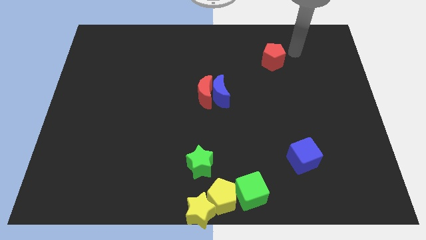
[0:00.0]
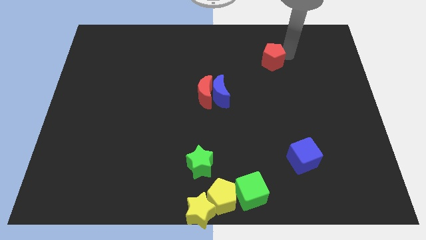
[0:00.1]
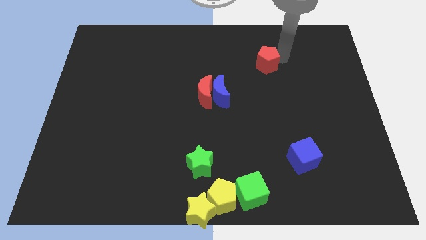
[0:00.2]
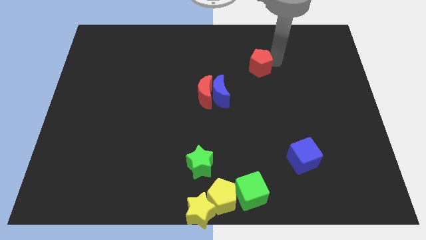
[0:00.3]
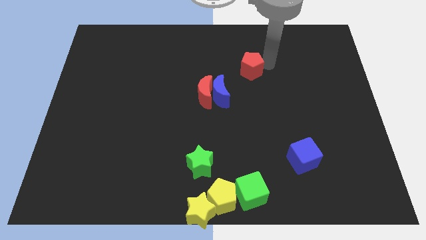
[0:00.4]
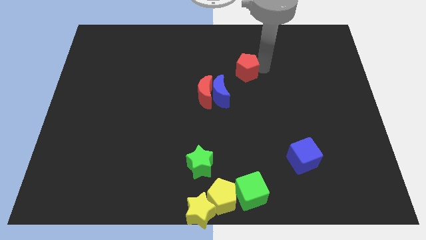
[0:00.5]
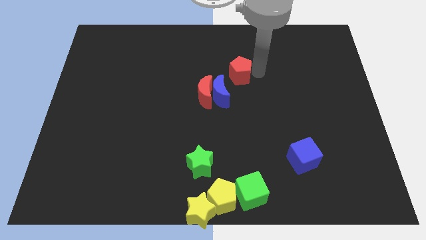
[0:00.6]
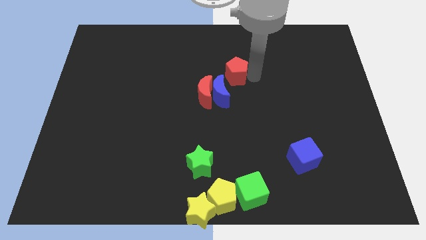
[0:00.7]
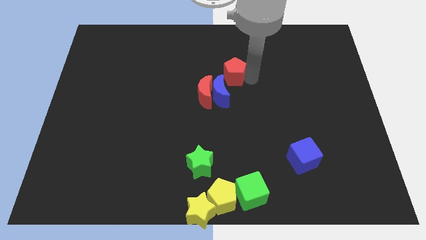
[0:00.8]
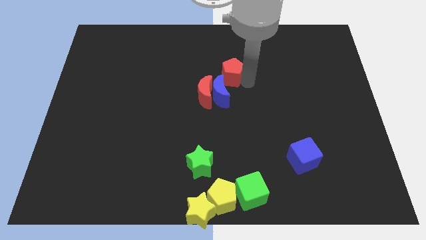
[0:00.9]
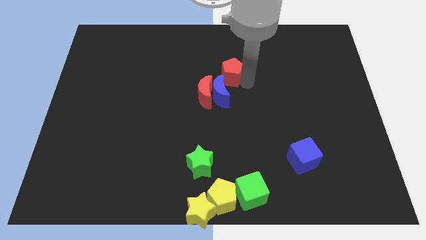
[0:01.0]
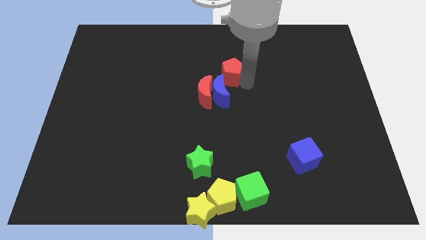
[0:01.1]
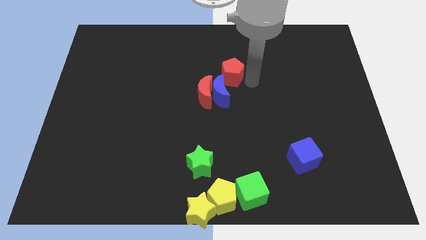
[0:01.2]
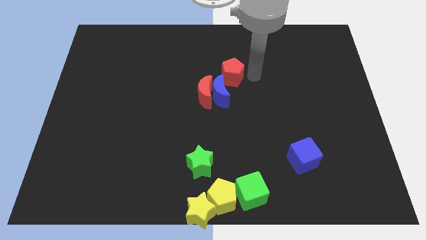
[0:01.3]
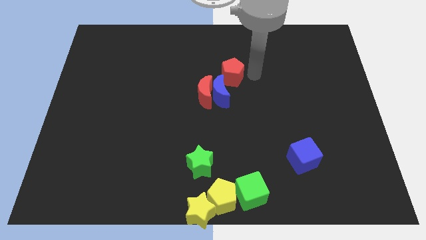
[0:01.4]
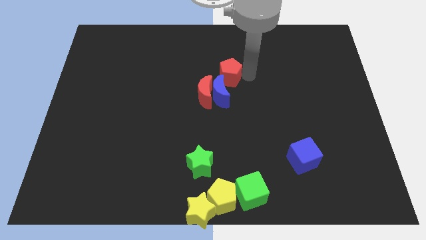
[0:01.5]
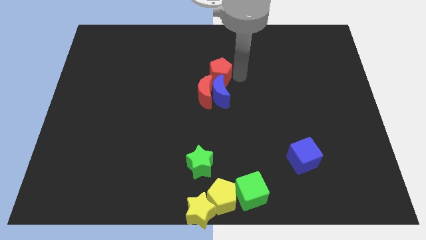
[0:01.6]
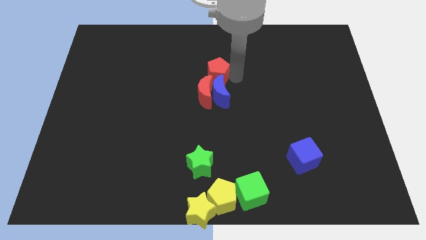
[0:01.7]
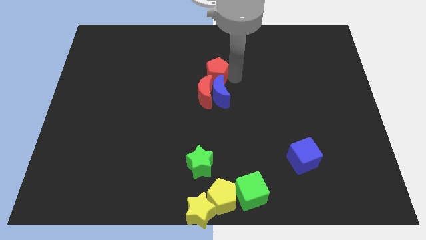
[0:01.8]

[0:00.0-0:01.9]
push the red pentagon to the top of the blue crescent

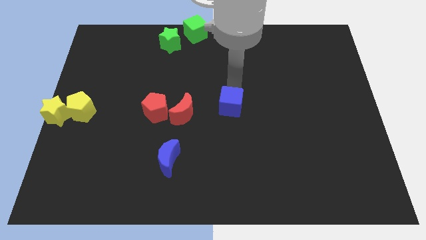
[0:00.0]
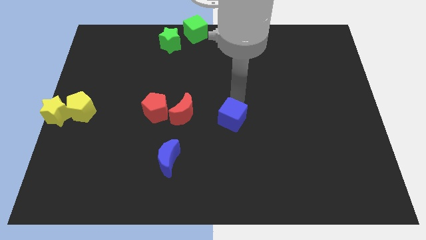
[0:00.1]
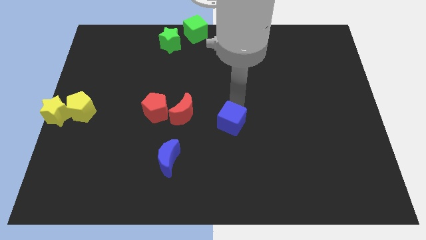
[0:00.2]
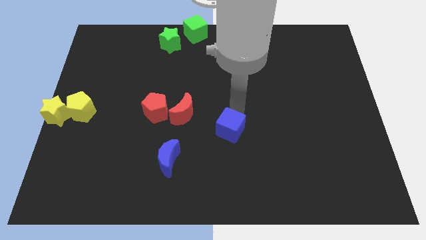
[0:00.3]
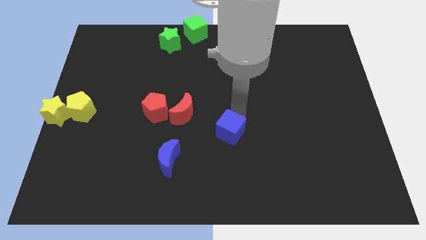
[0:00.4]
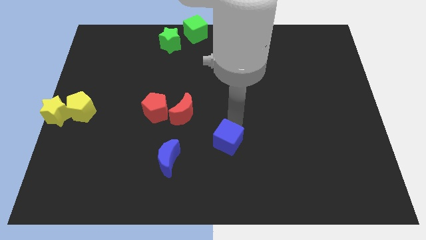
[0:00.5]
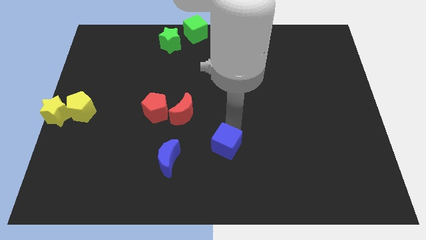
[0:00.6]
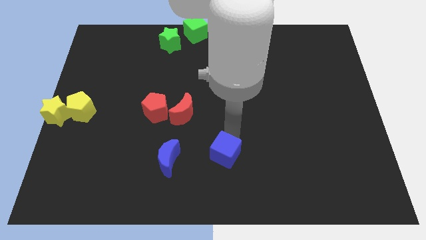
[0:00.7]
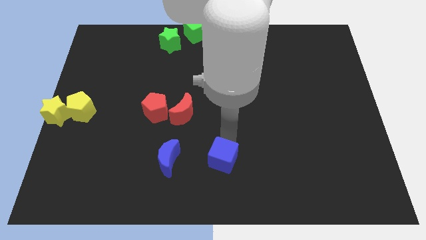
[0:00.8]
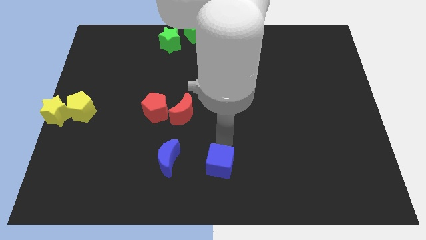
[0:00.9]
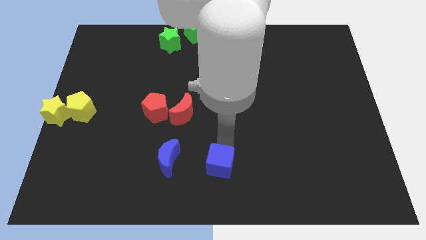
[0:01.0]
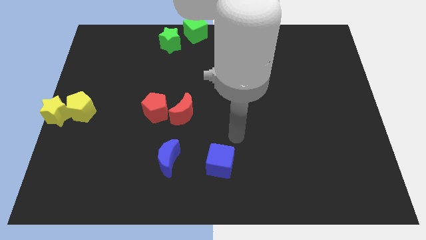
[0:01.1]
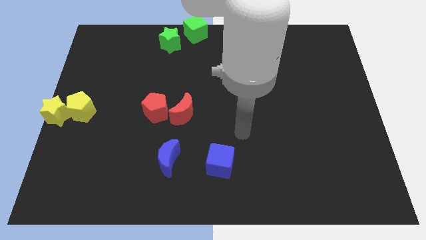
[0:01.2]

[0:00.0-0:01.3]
move the blue cube horizontal to the blue moon

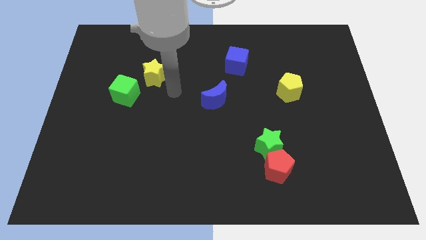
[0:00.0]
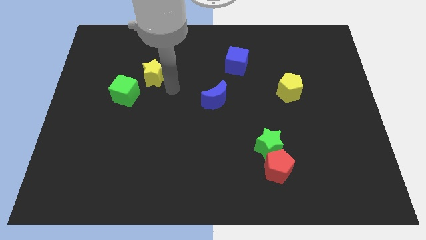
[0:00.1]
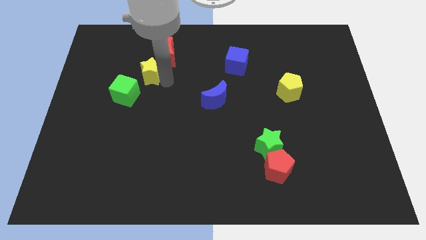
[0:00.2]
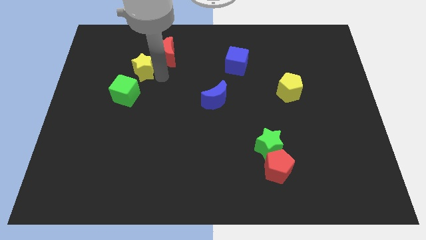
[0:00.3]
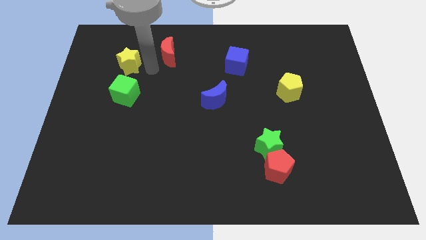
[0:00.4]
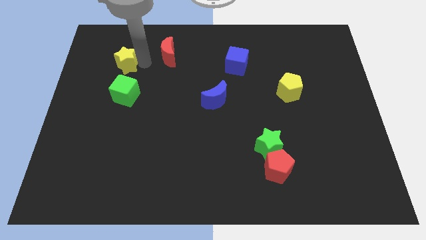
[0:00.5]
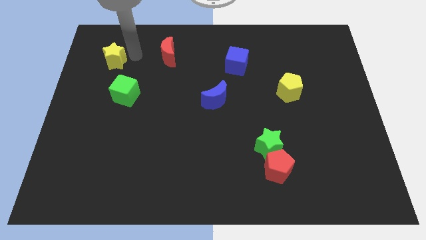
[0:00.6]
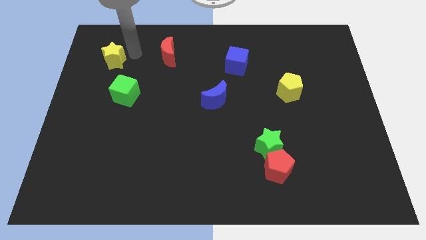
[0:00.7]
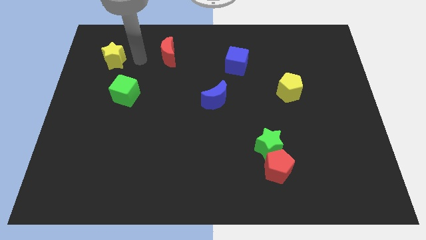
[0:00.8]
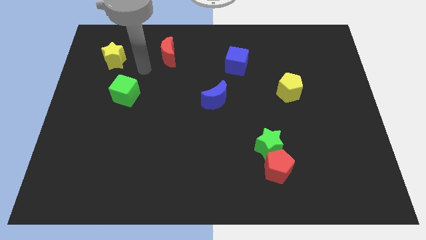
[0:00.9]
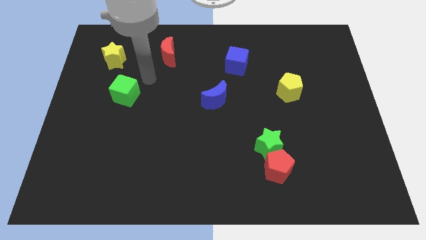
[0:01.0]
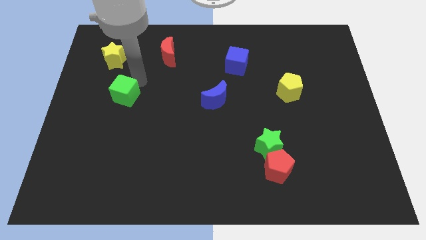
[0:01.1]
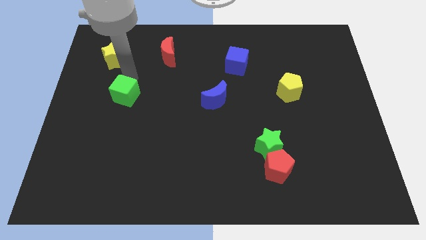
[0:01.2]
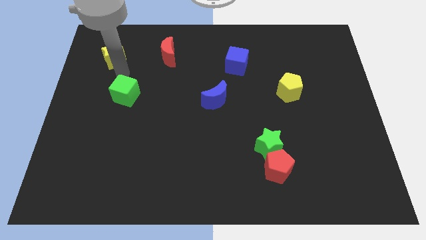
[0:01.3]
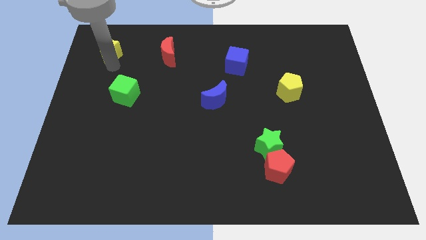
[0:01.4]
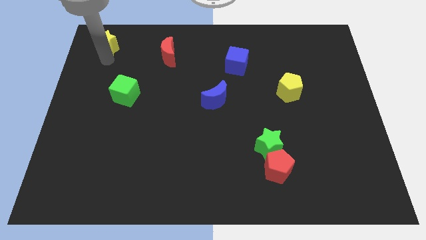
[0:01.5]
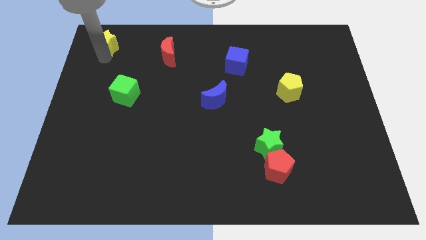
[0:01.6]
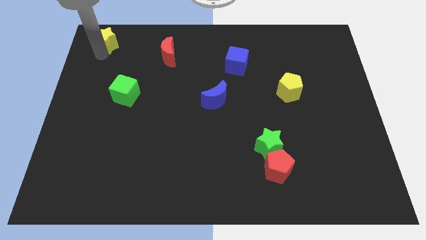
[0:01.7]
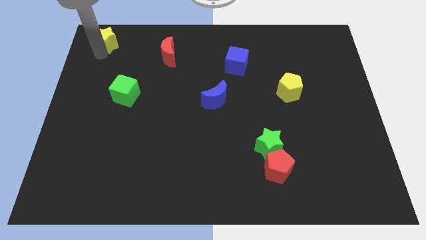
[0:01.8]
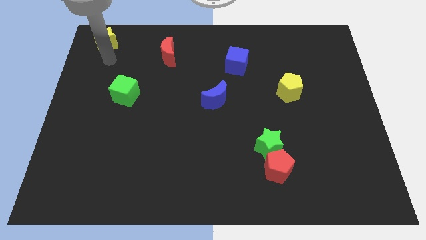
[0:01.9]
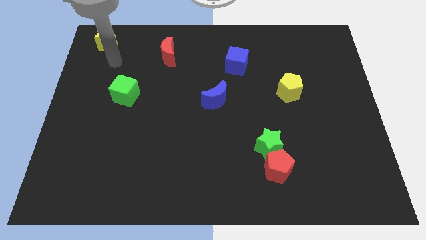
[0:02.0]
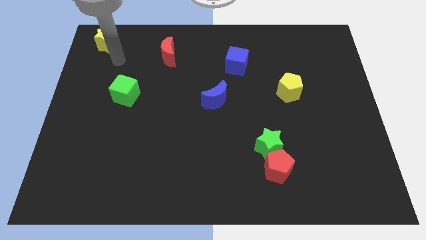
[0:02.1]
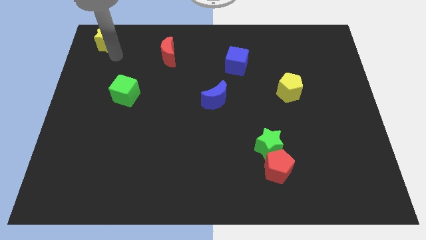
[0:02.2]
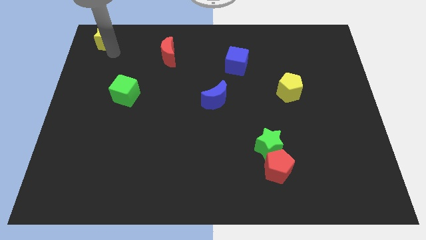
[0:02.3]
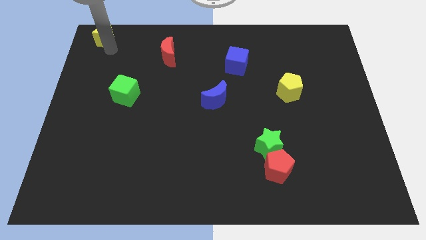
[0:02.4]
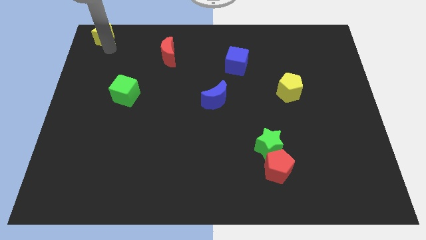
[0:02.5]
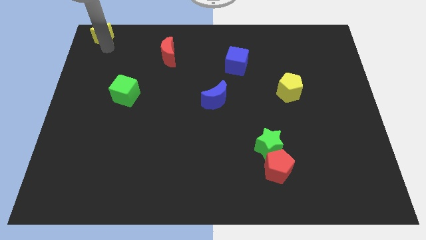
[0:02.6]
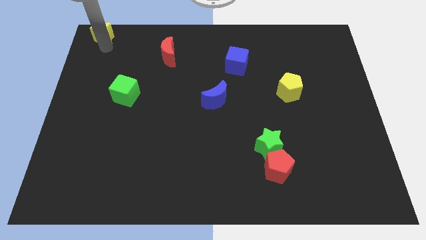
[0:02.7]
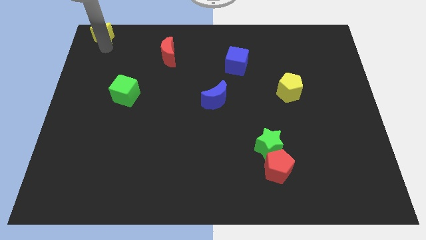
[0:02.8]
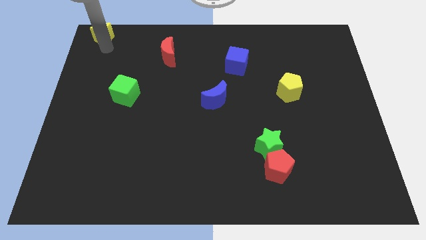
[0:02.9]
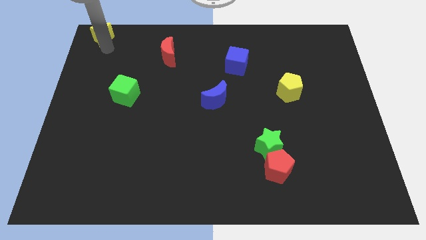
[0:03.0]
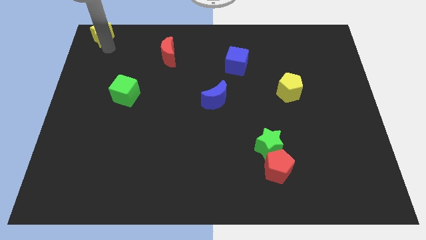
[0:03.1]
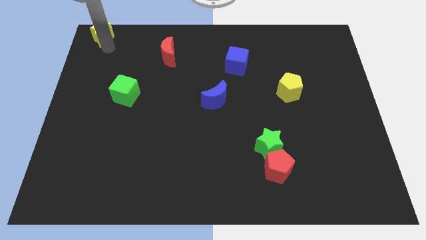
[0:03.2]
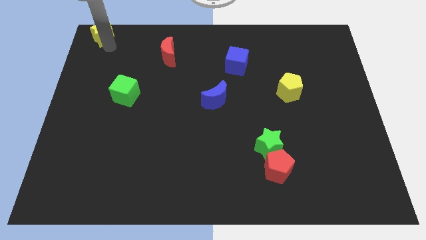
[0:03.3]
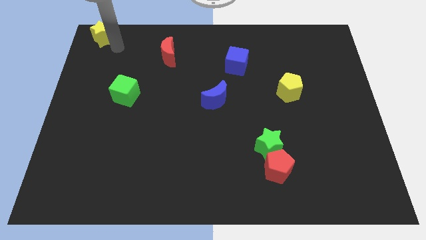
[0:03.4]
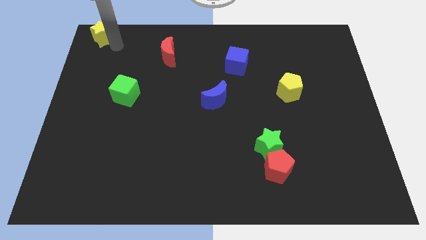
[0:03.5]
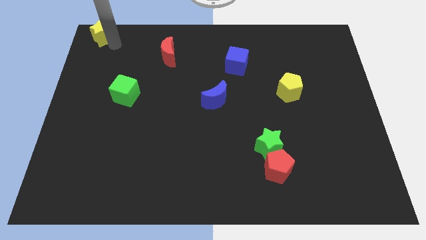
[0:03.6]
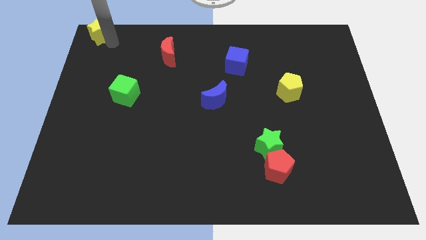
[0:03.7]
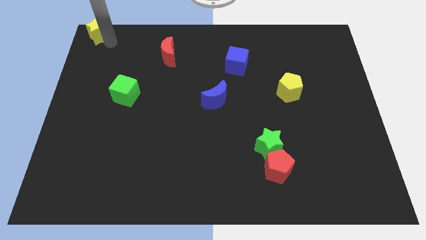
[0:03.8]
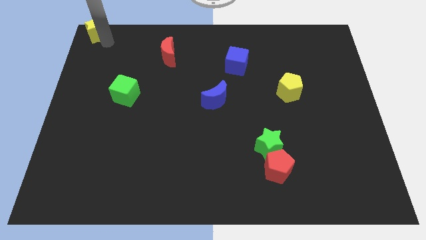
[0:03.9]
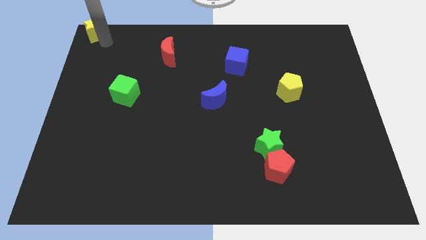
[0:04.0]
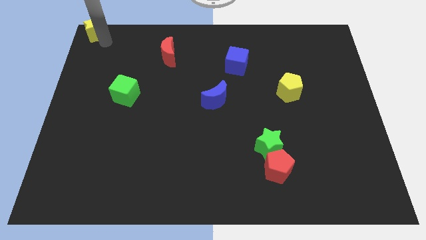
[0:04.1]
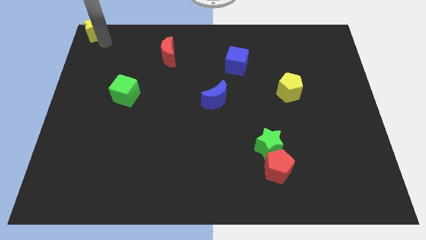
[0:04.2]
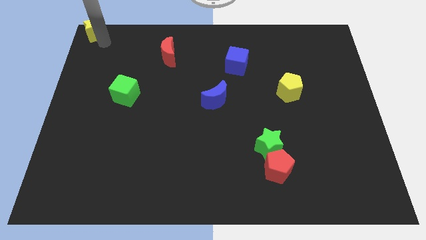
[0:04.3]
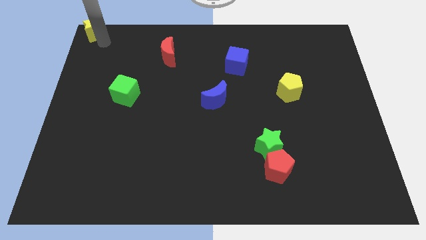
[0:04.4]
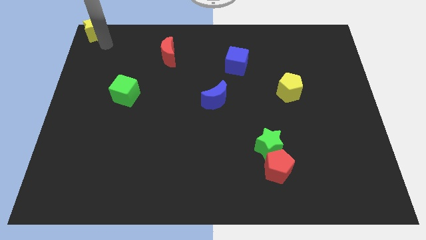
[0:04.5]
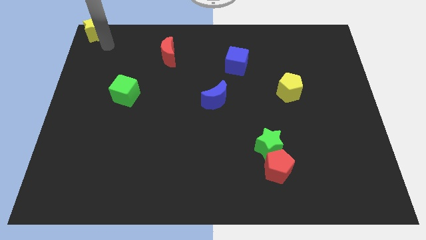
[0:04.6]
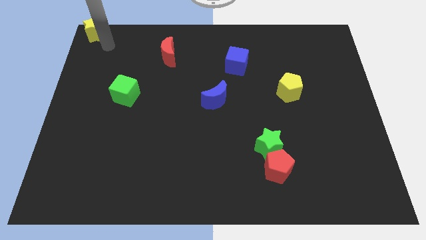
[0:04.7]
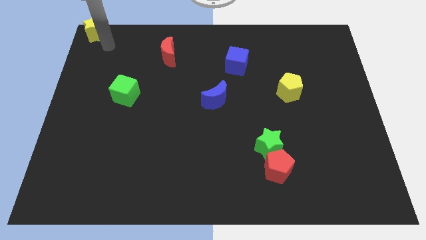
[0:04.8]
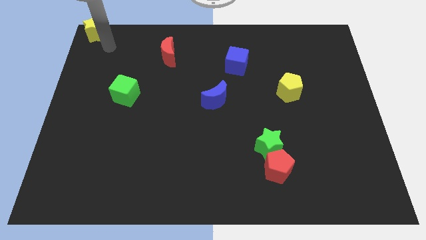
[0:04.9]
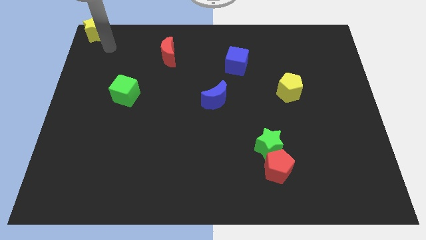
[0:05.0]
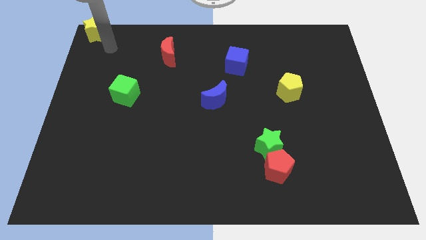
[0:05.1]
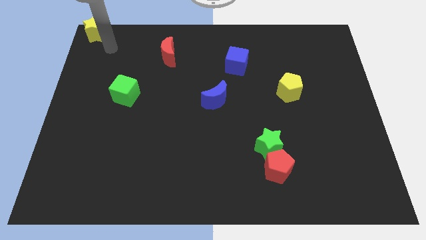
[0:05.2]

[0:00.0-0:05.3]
push the yellow star to the top left corner

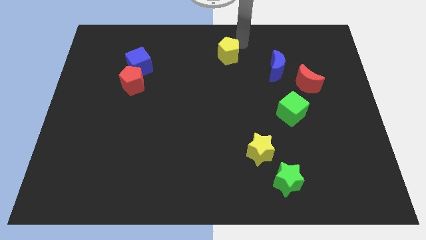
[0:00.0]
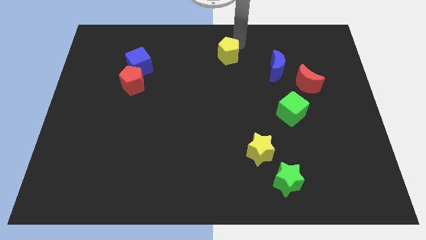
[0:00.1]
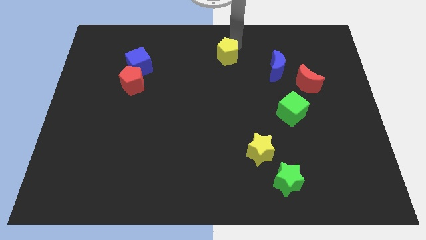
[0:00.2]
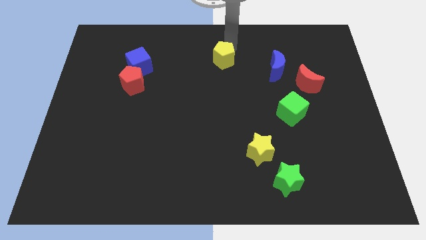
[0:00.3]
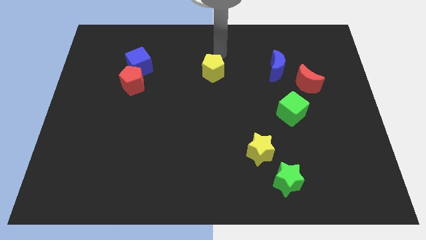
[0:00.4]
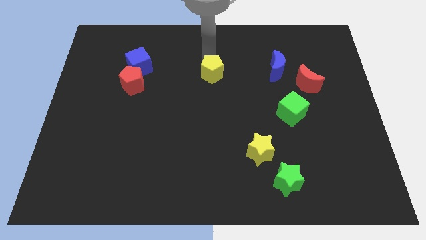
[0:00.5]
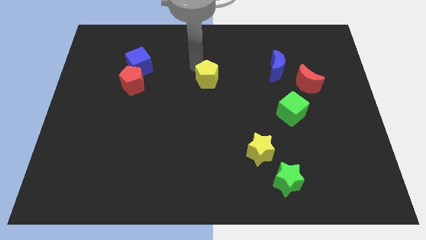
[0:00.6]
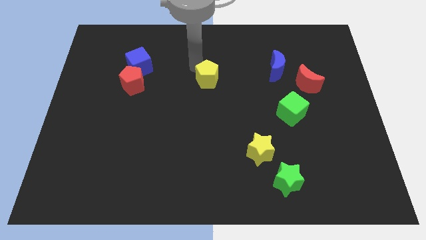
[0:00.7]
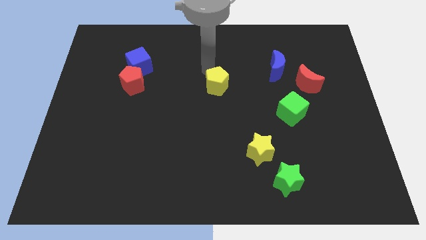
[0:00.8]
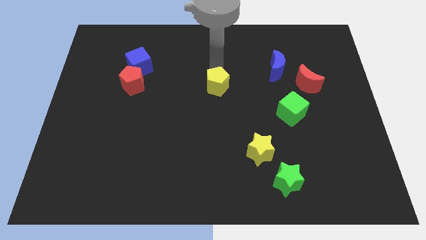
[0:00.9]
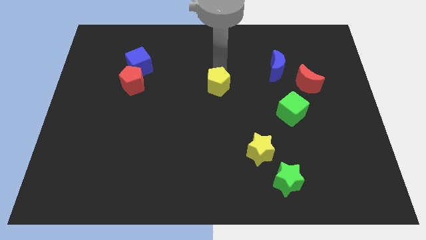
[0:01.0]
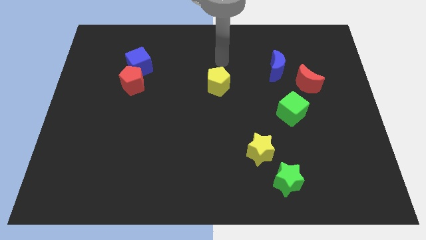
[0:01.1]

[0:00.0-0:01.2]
push the yellow pentagon to the bottom of the board
